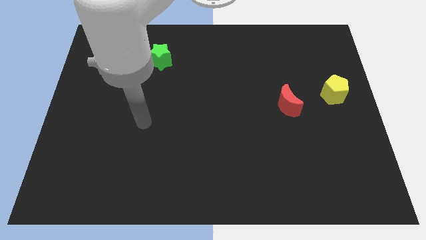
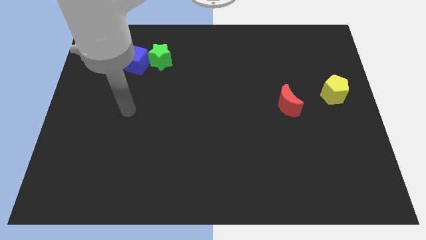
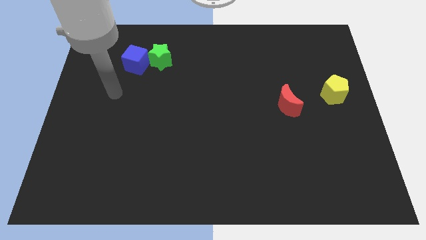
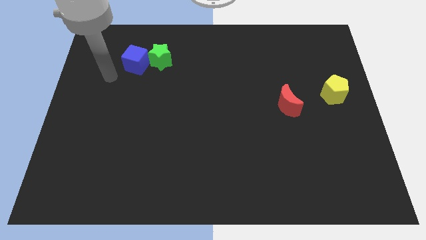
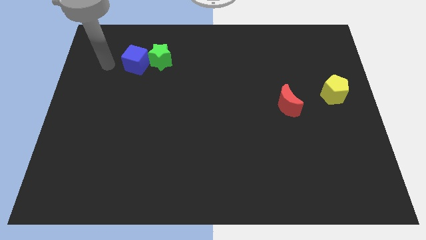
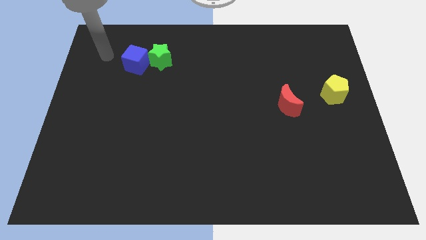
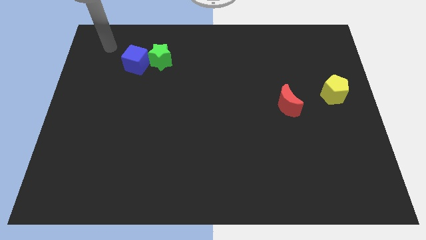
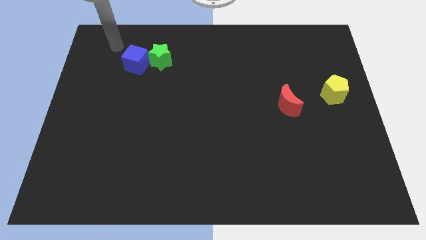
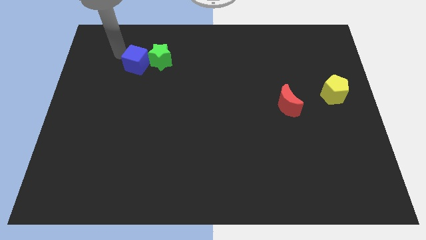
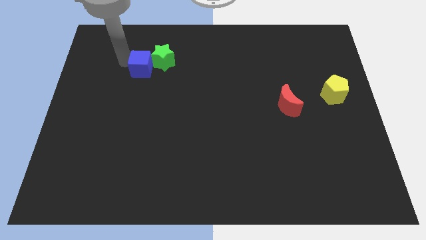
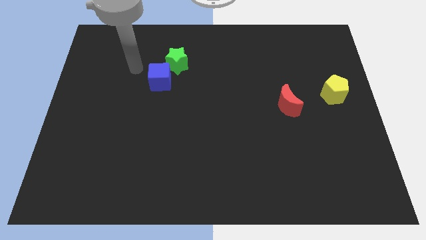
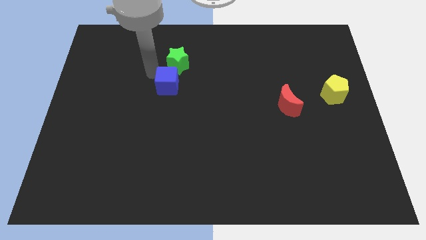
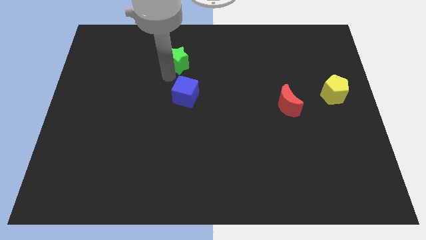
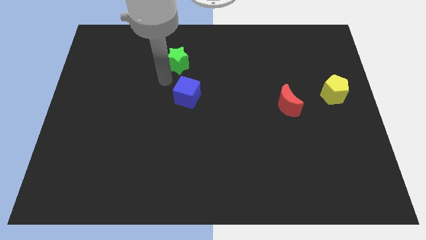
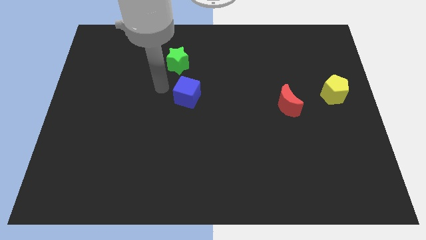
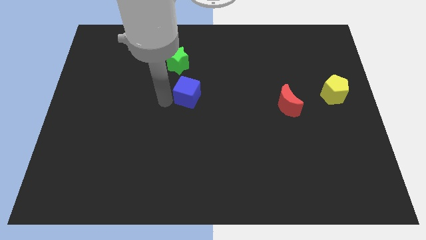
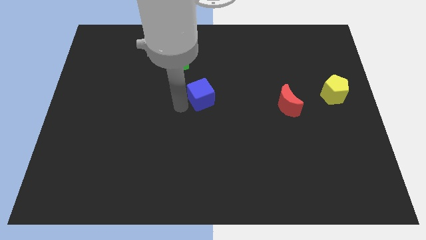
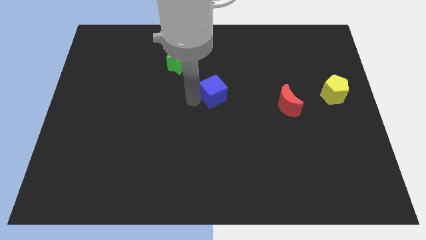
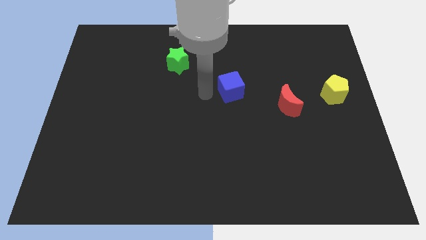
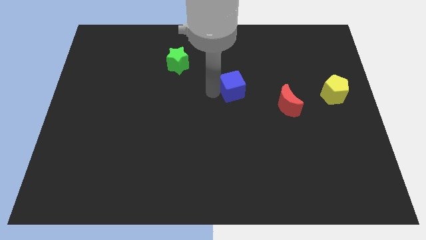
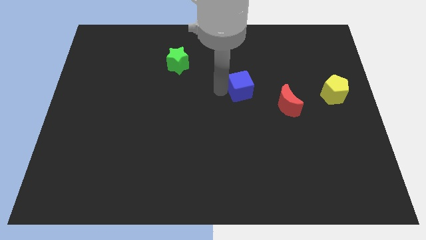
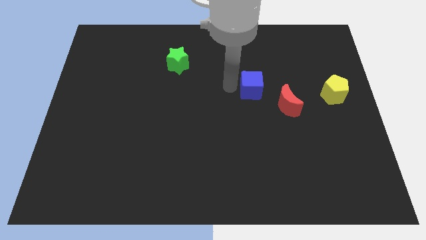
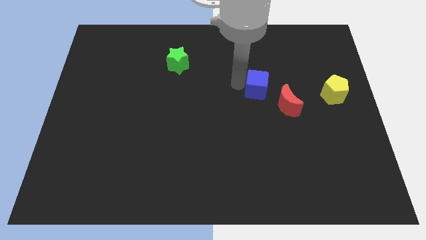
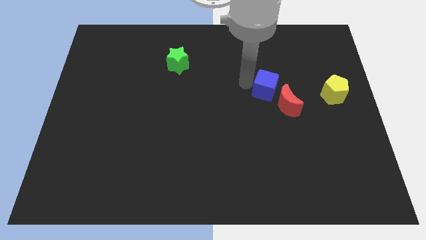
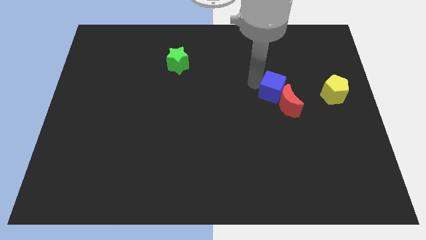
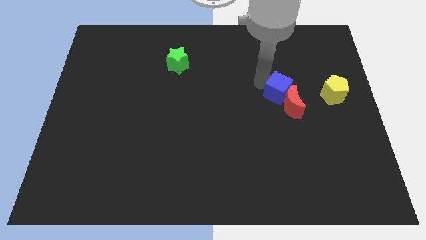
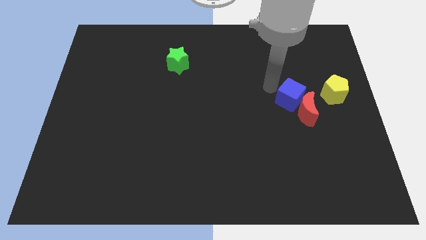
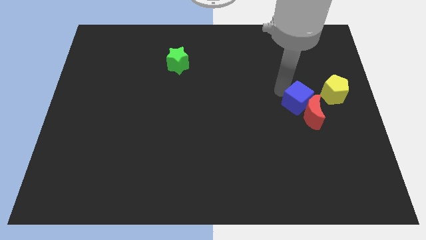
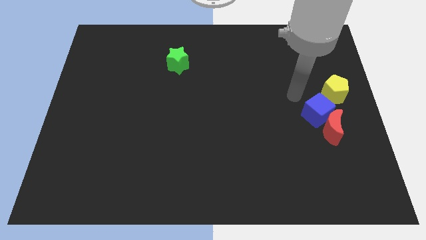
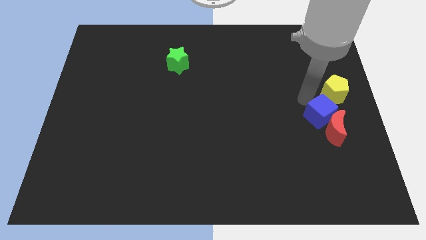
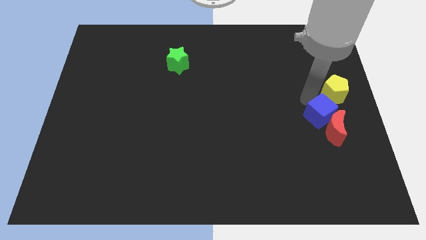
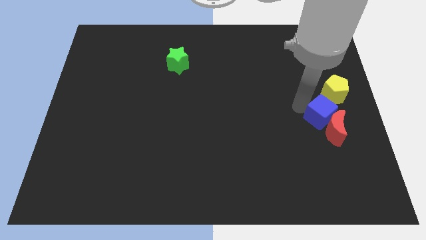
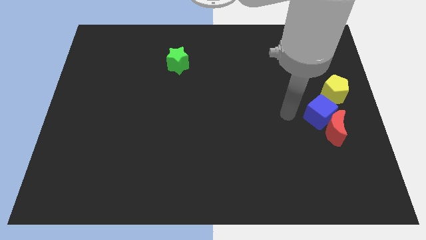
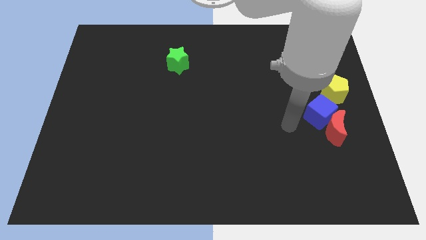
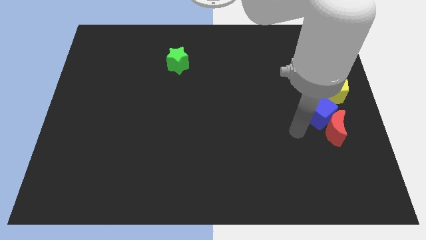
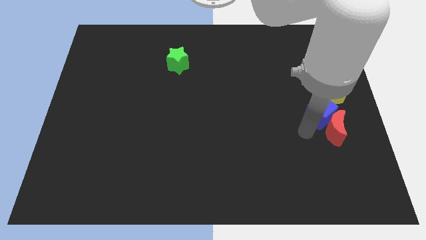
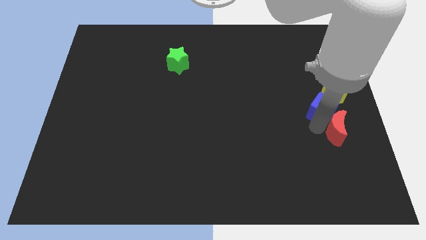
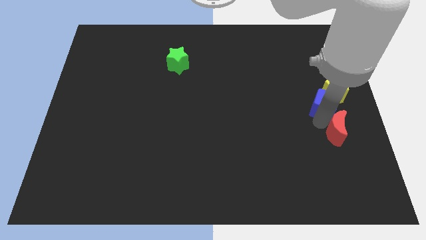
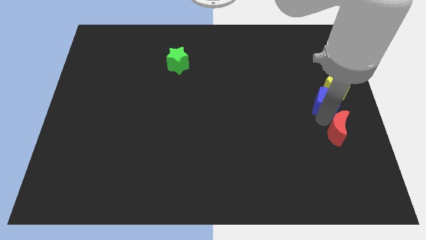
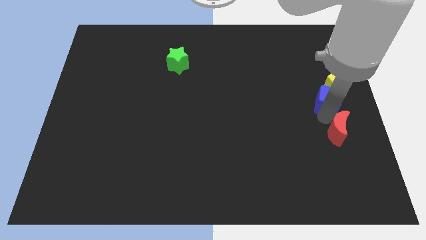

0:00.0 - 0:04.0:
push the blue cube next to the yellow pentagon

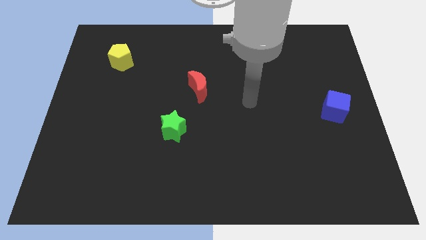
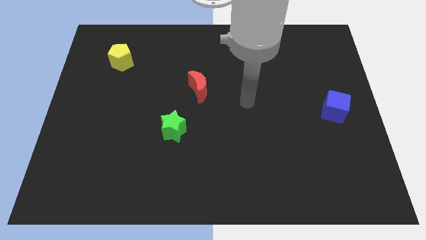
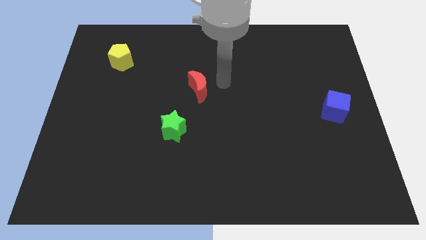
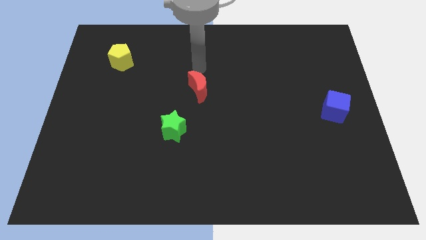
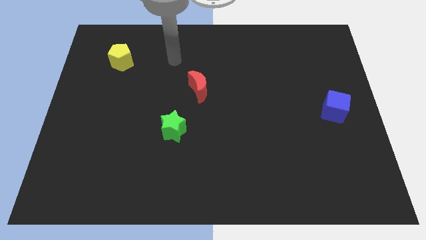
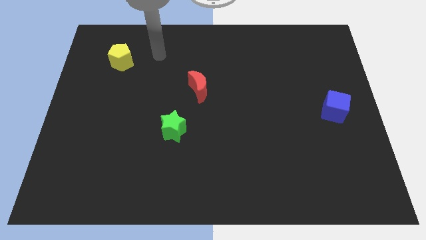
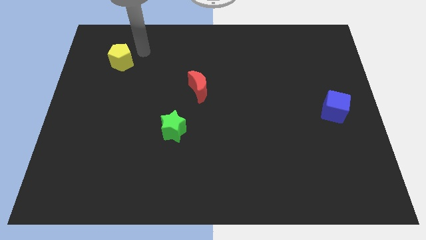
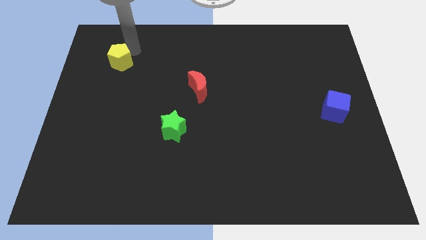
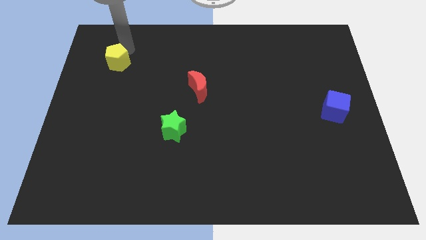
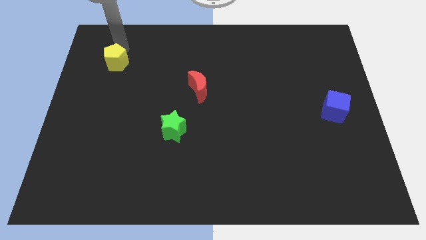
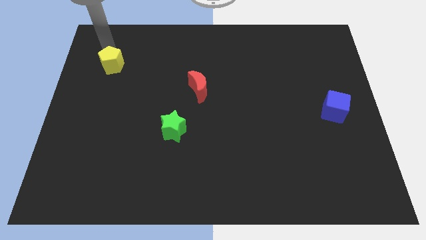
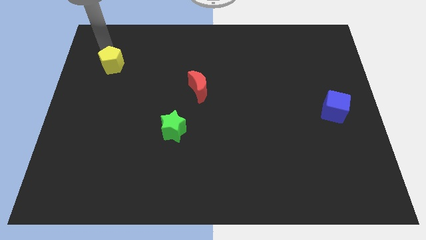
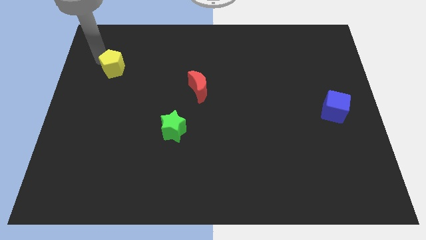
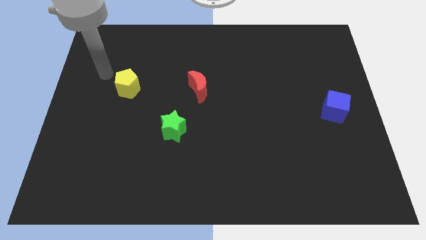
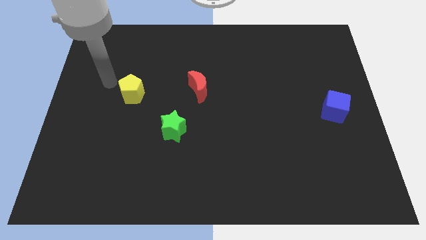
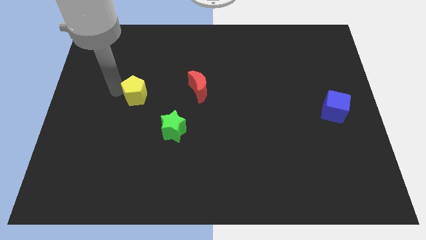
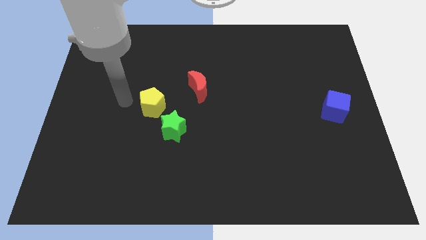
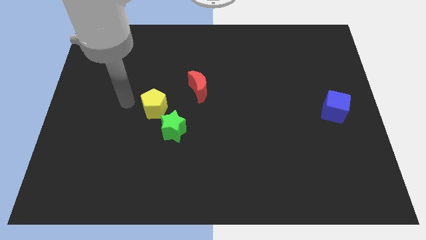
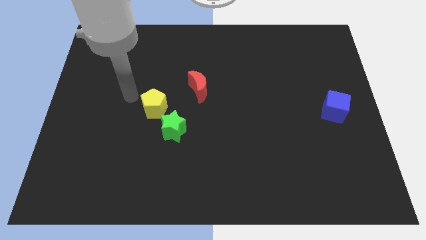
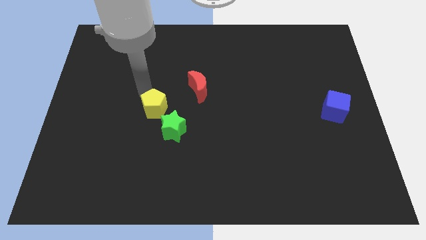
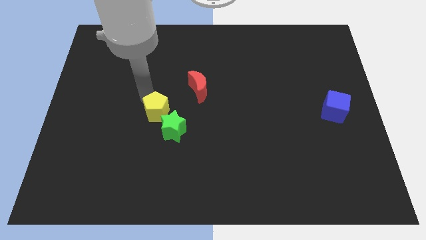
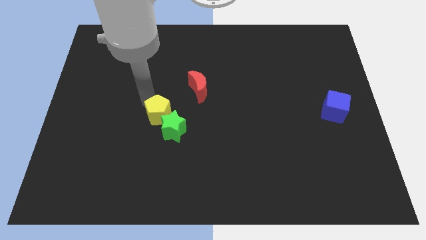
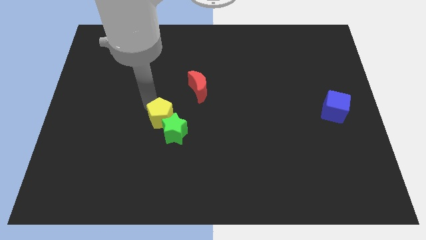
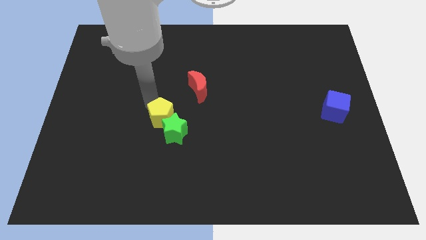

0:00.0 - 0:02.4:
slide the pentagon towards the green star

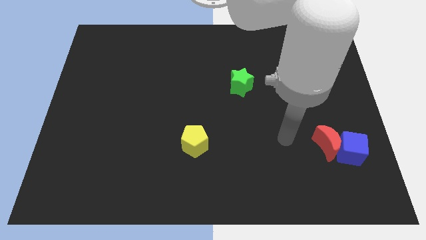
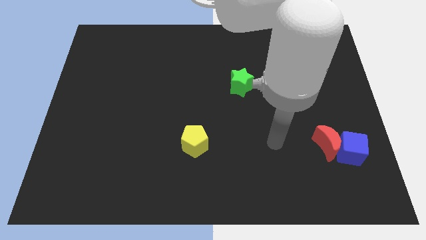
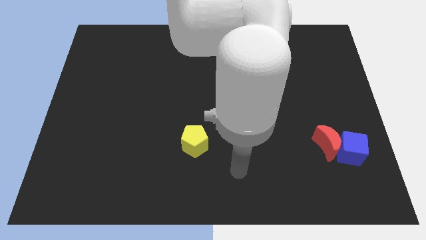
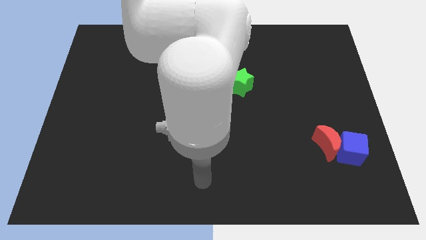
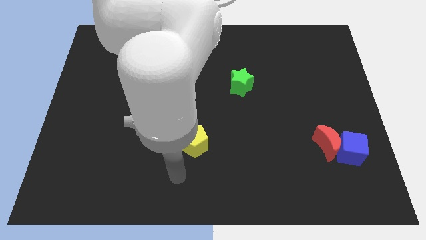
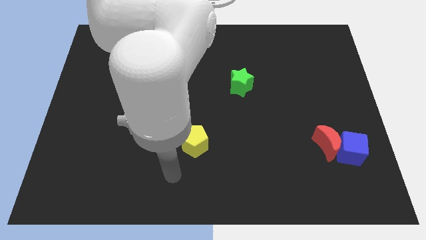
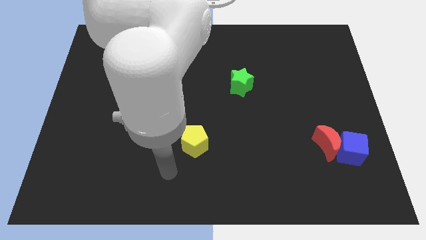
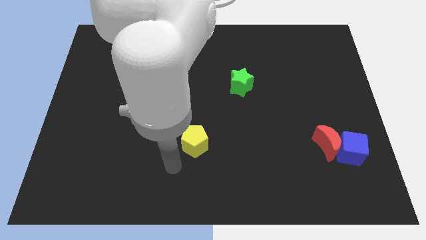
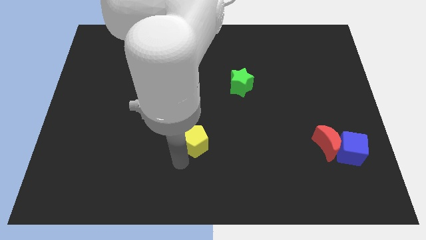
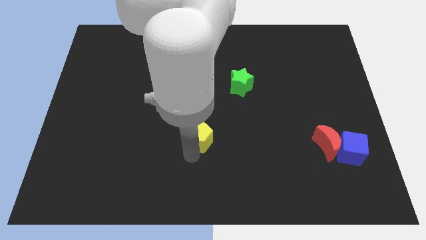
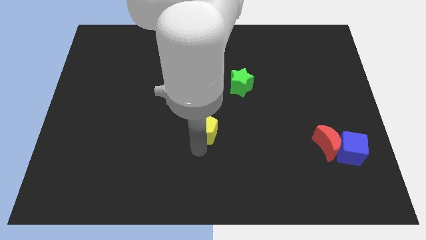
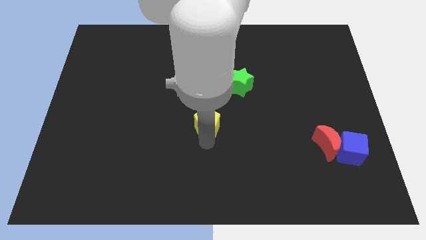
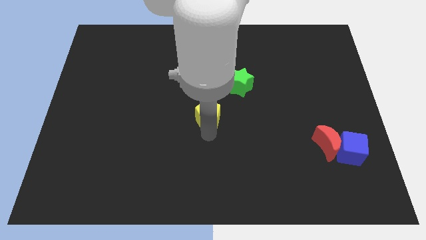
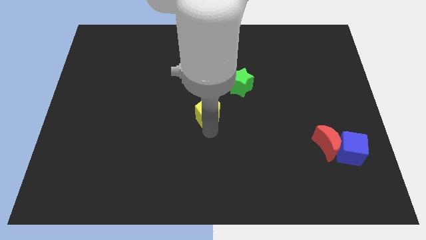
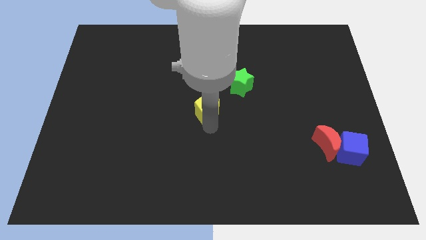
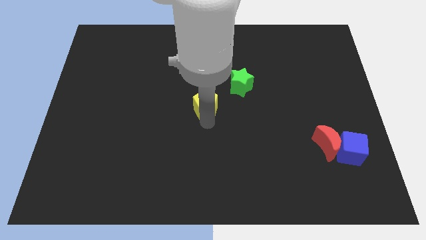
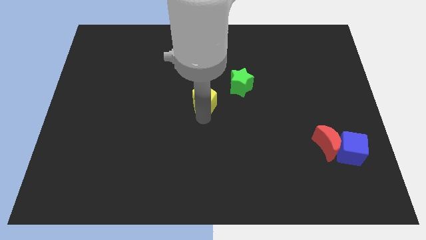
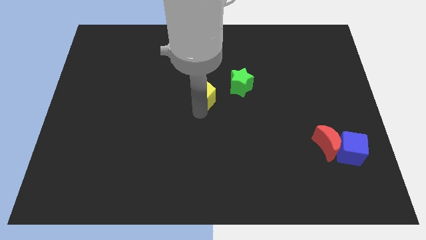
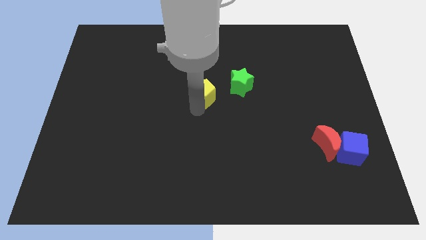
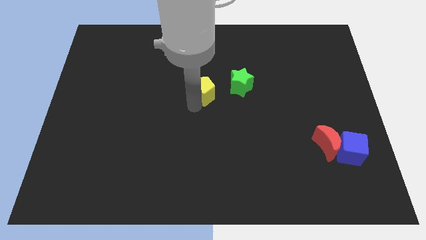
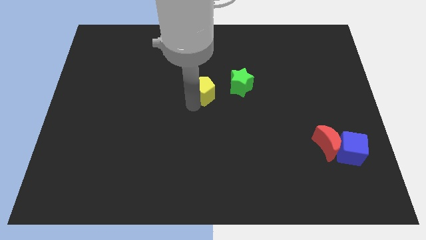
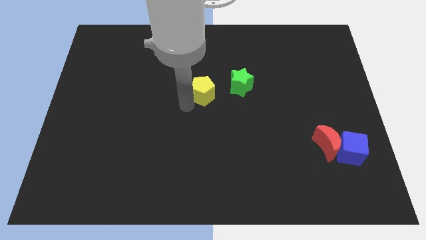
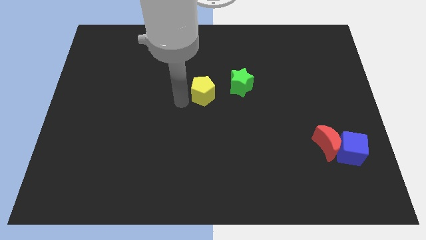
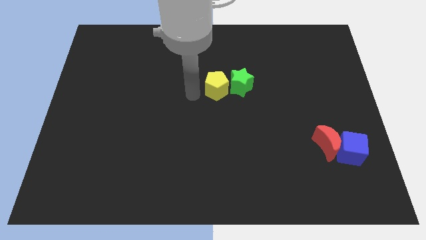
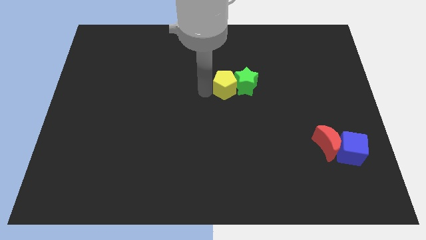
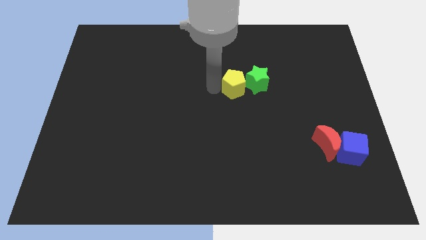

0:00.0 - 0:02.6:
move the yellow block to the green block
